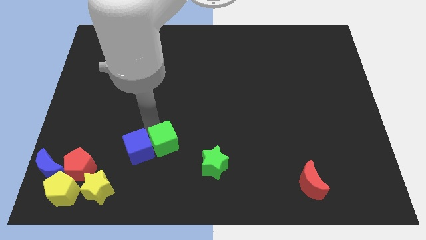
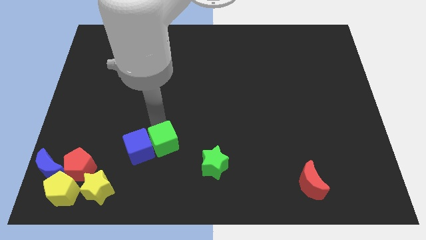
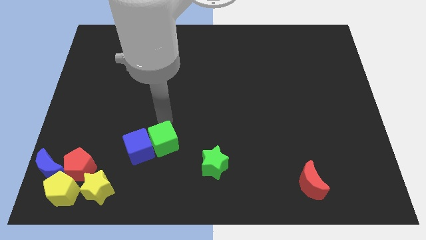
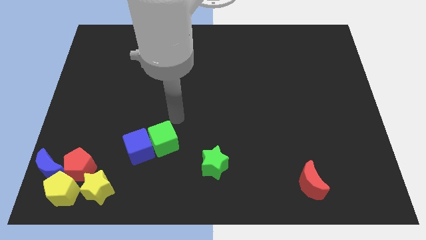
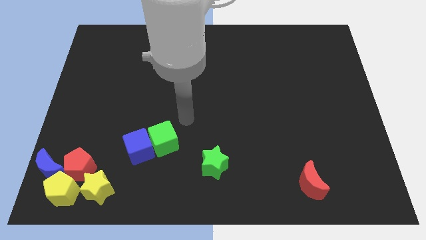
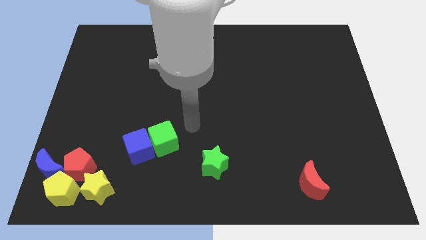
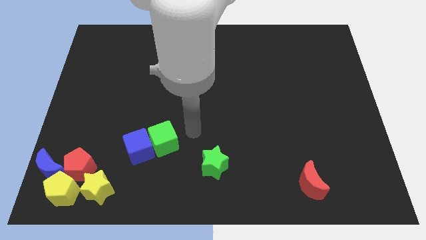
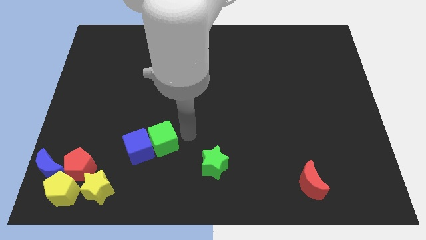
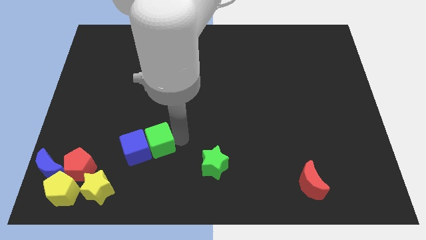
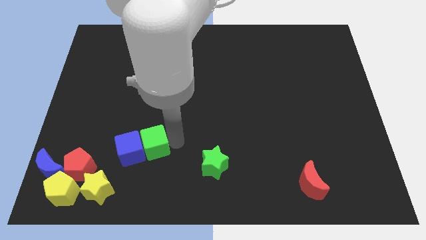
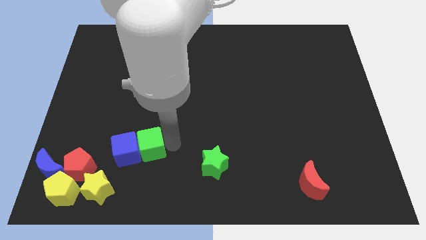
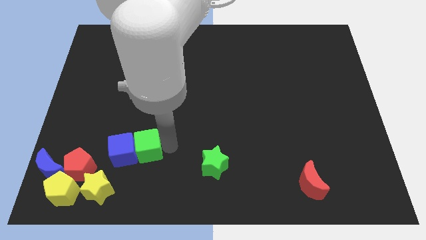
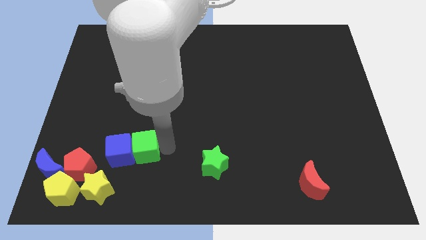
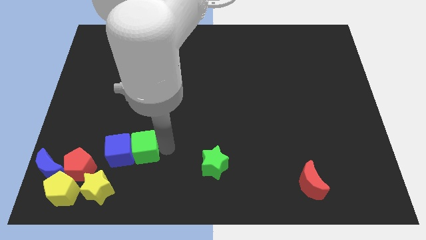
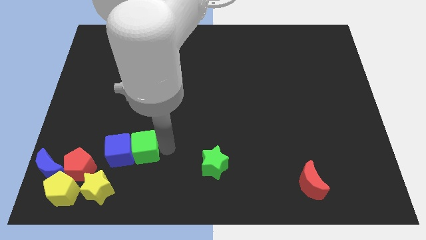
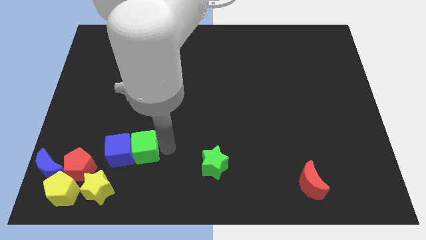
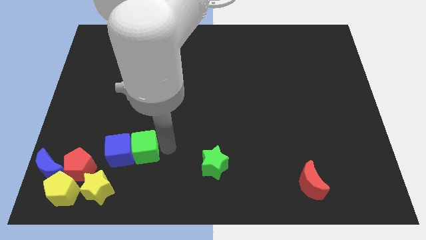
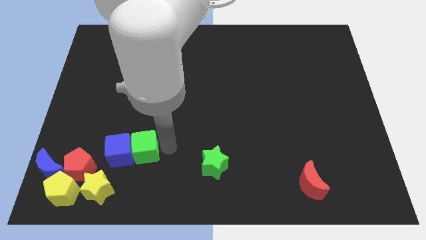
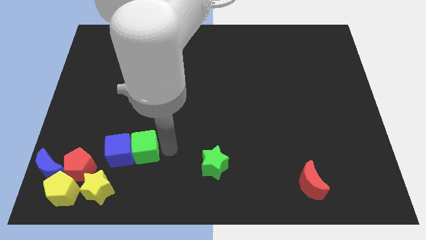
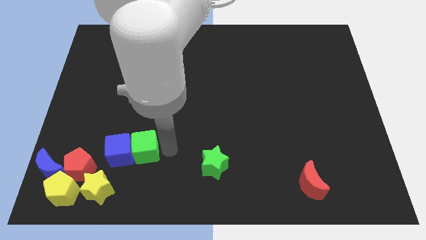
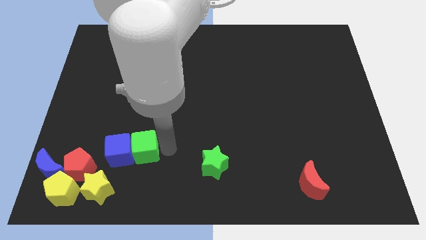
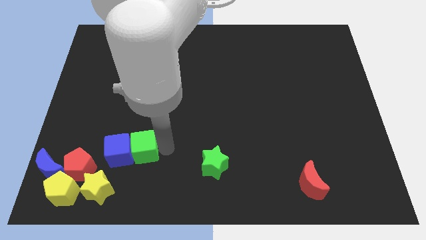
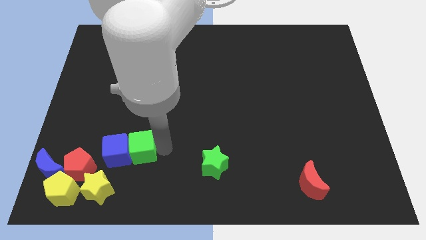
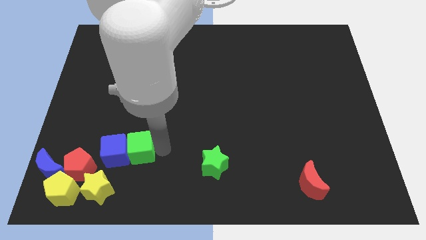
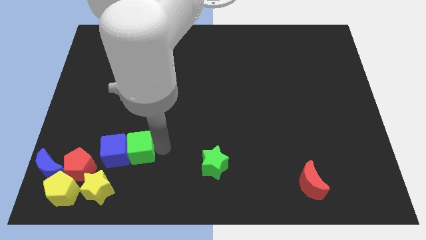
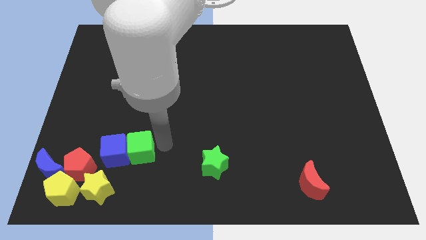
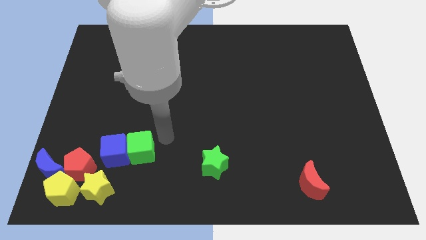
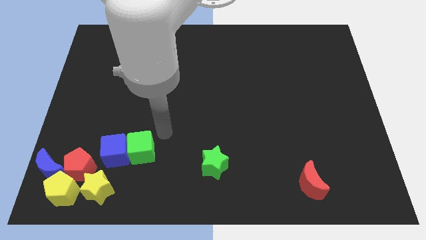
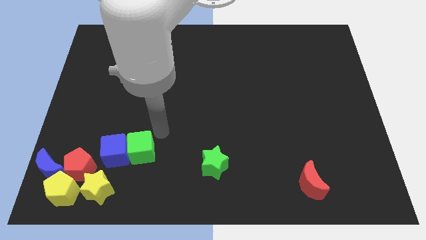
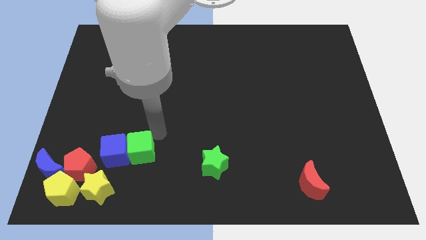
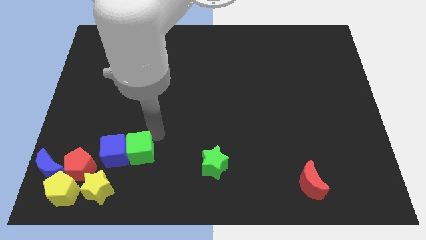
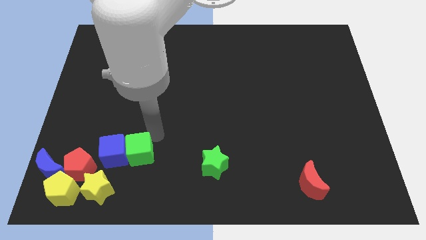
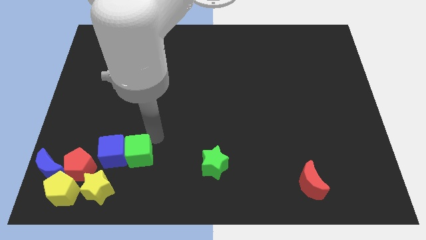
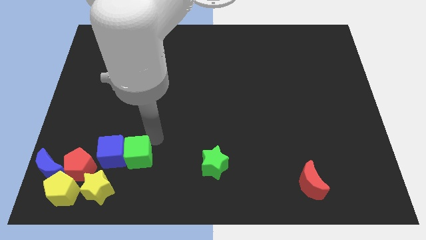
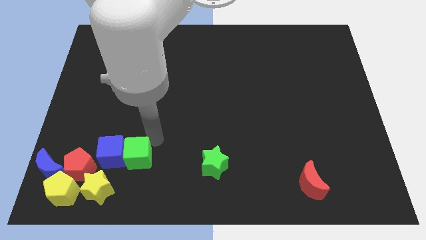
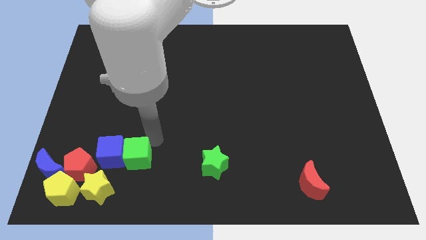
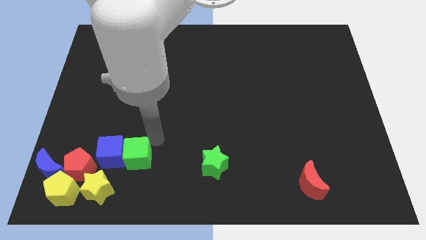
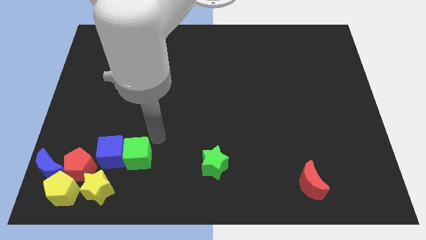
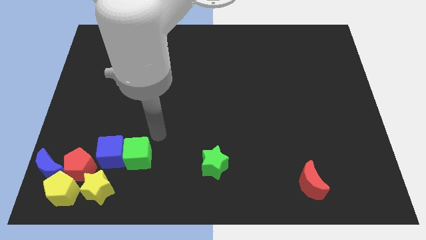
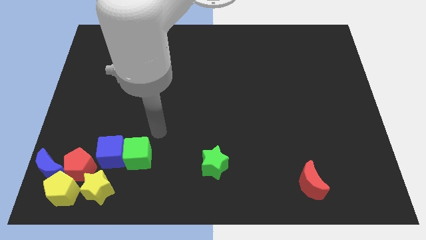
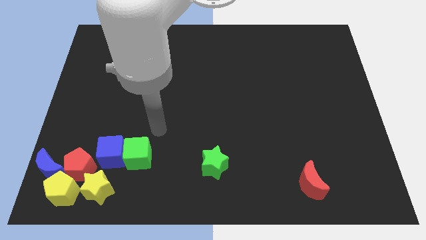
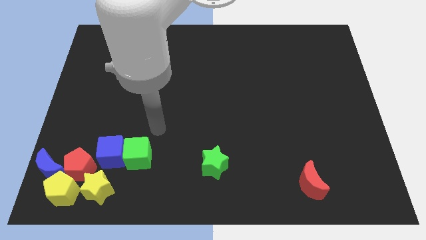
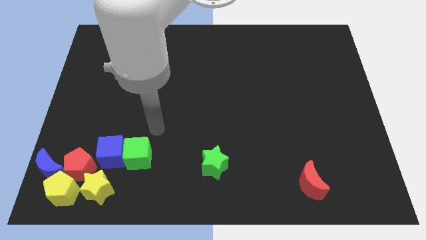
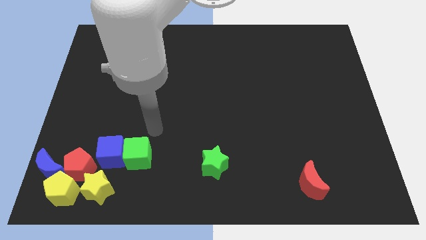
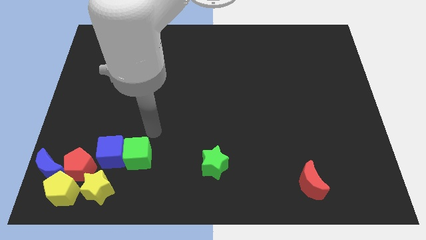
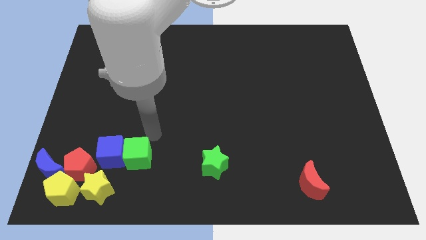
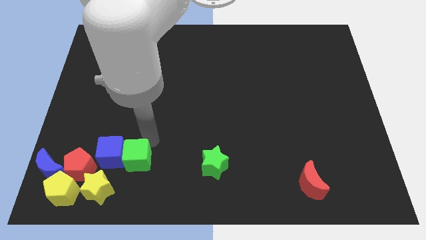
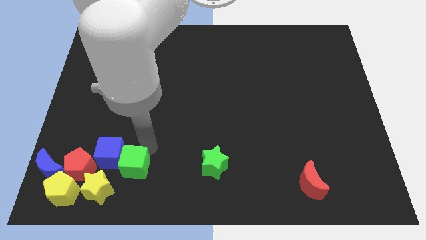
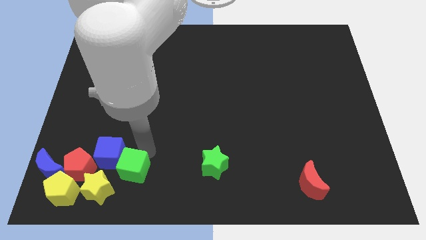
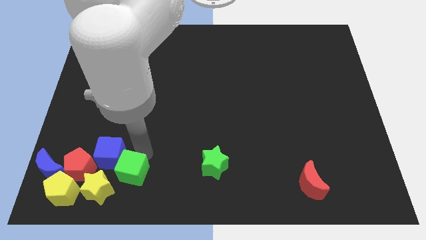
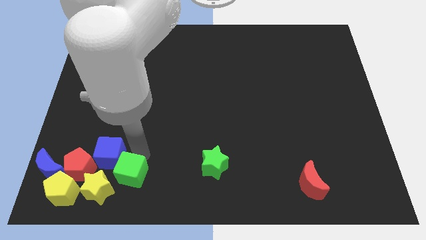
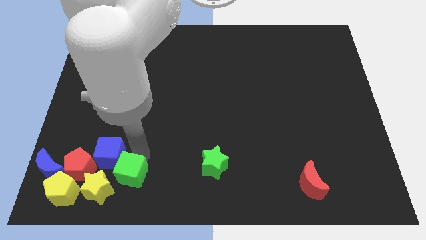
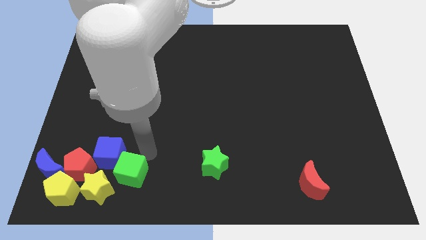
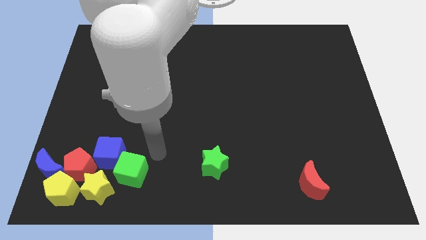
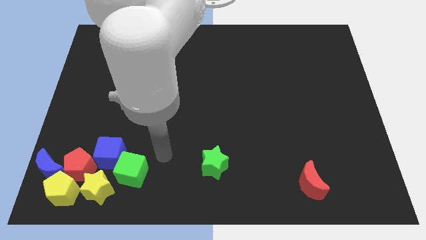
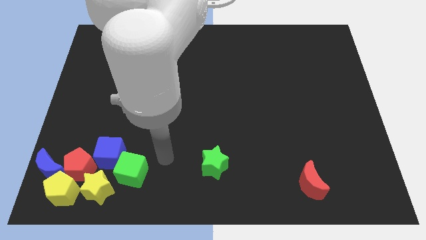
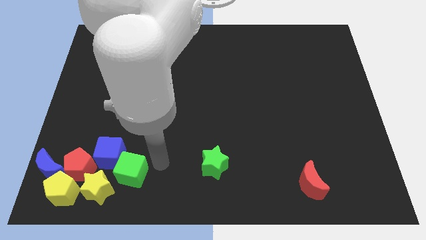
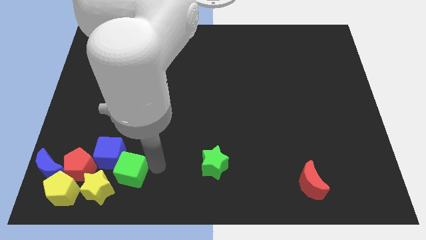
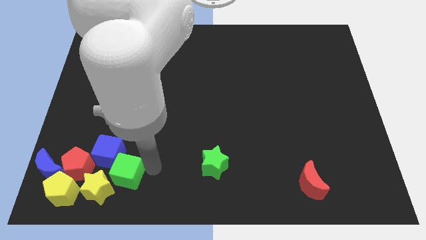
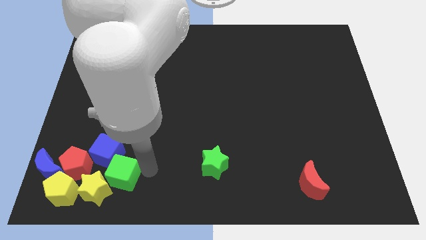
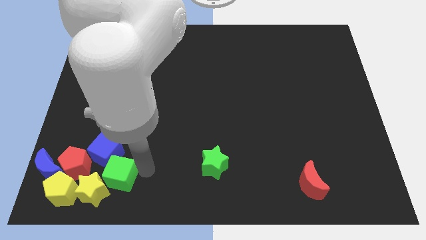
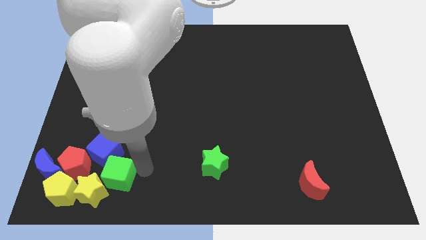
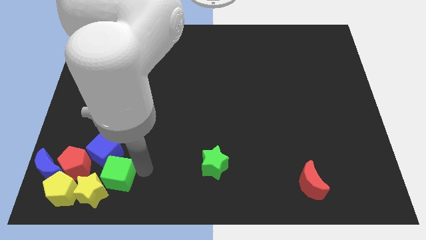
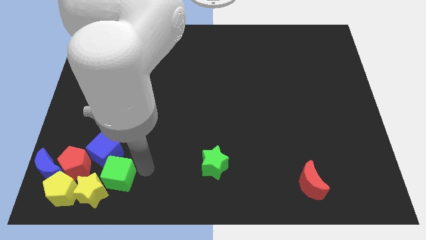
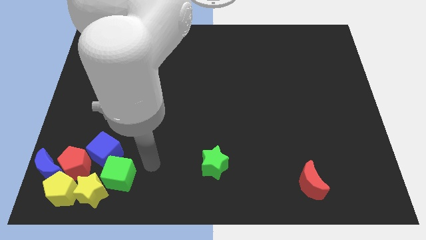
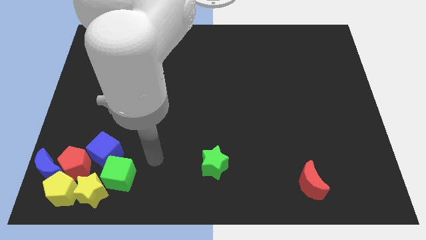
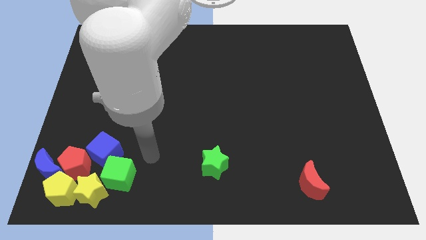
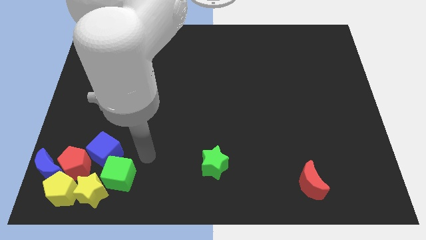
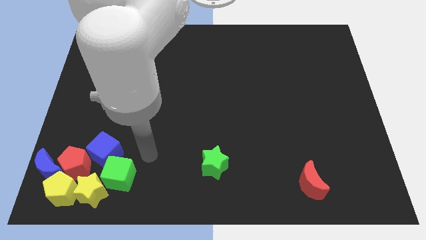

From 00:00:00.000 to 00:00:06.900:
push the green and blue cubes to the bottom left corner of the board

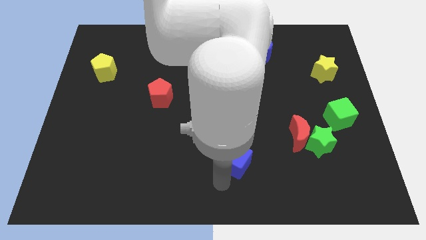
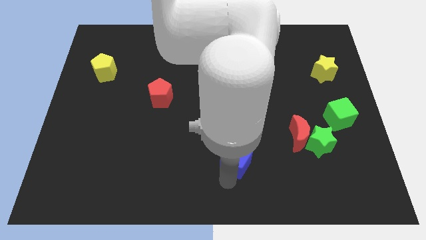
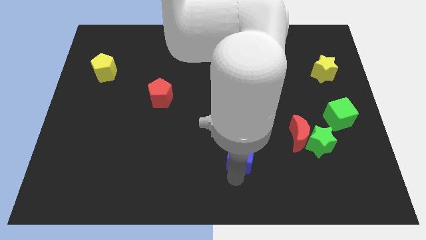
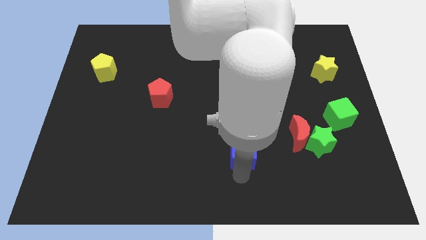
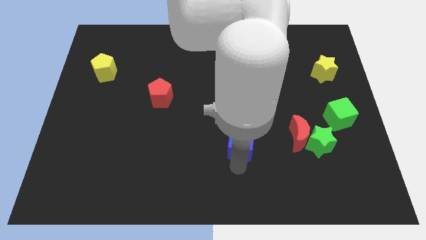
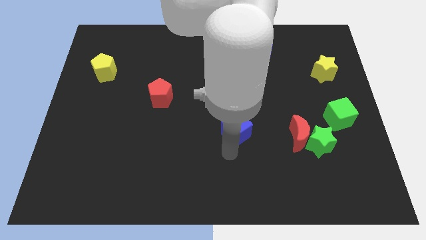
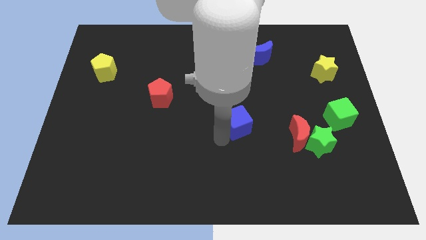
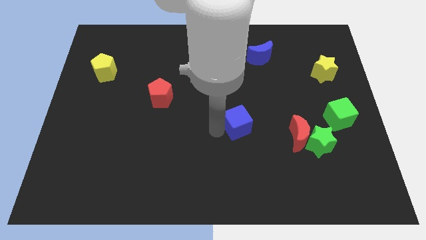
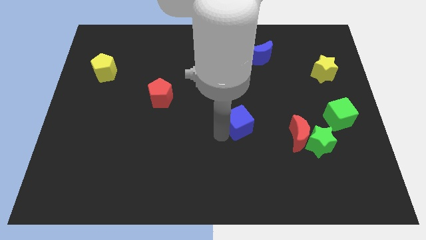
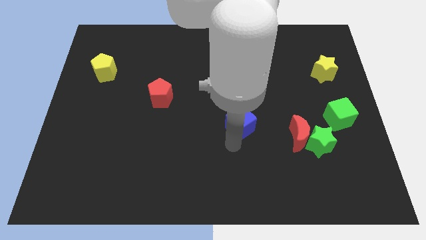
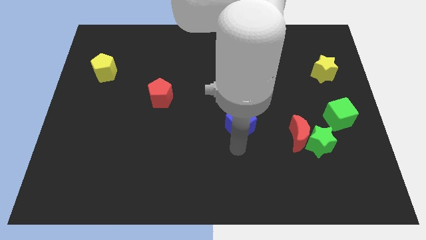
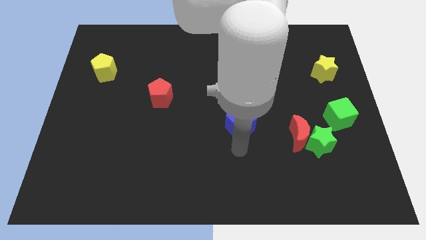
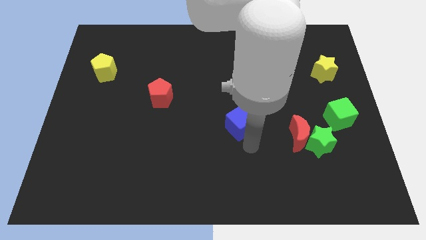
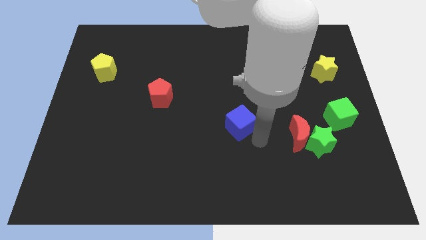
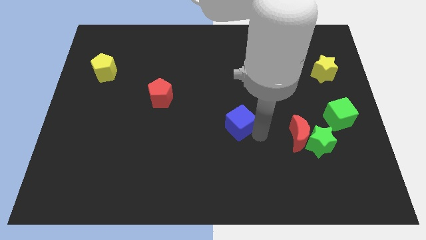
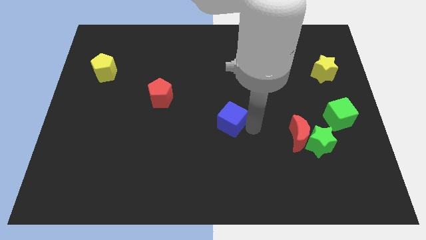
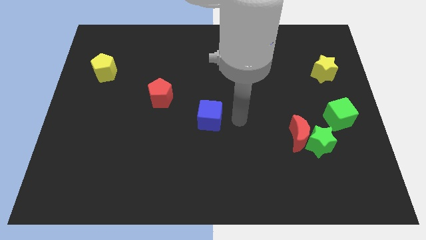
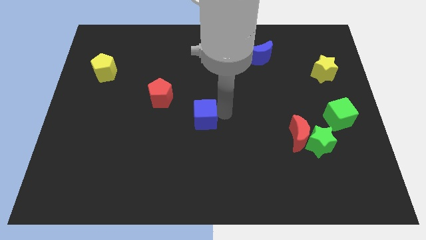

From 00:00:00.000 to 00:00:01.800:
place the blue cube at center of the board

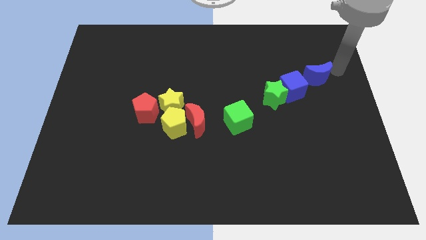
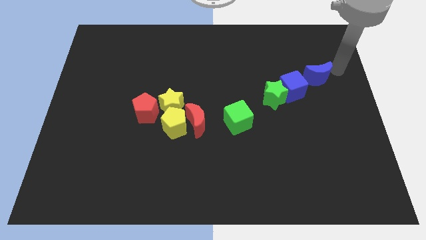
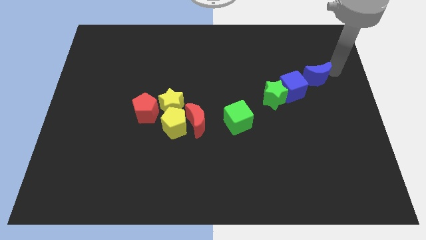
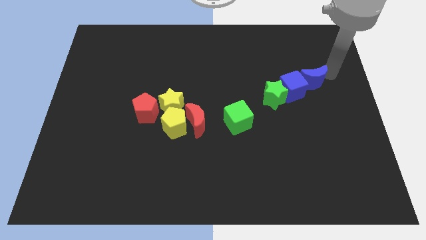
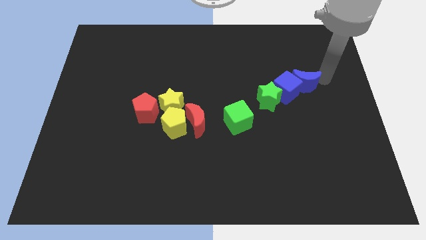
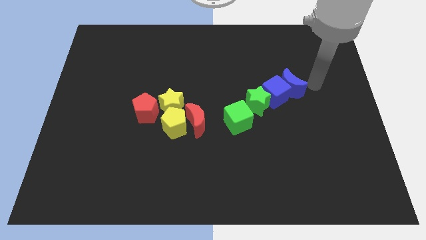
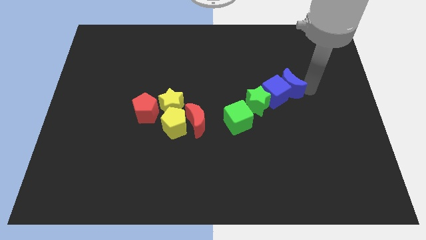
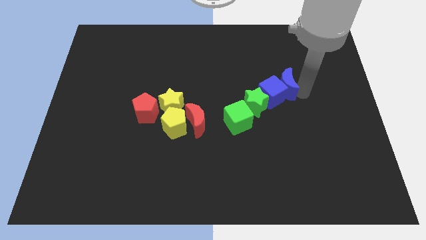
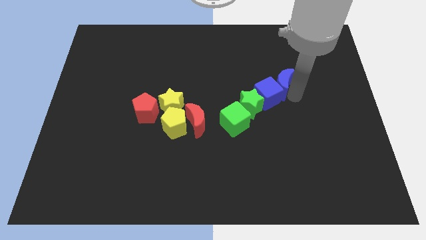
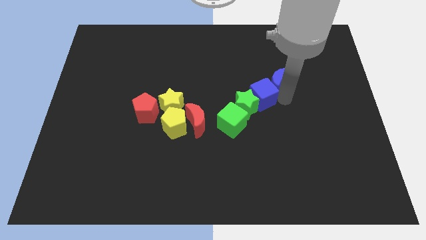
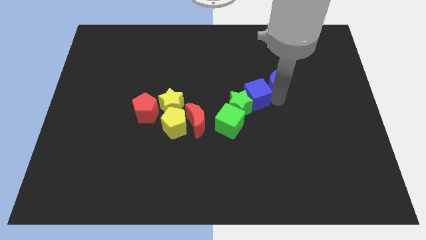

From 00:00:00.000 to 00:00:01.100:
push the blue crescent into the blue cube and green star
